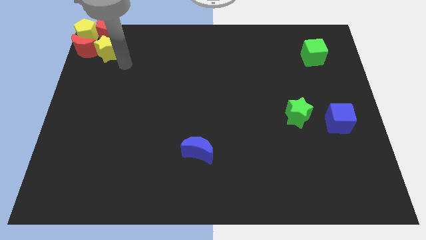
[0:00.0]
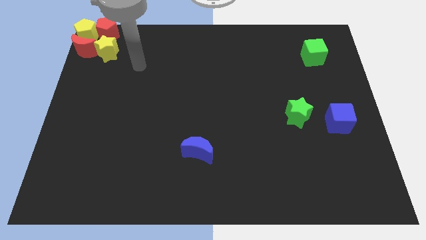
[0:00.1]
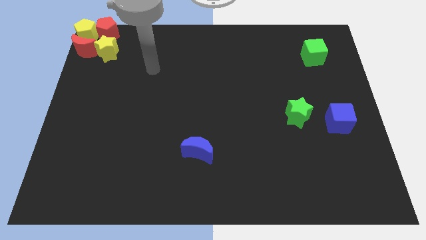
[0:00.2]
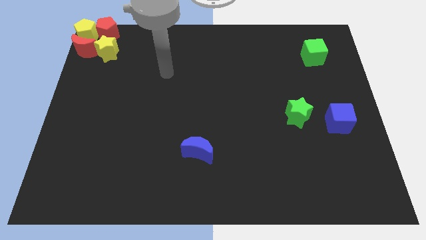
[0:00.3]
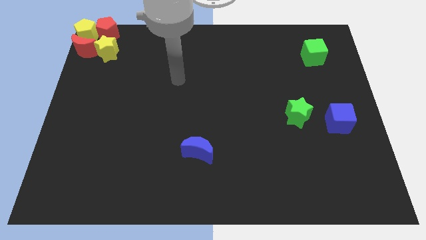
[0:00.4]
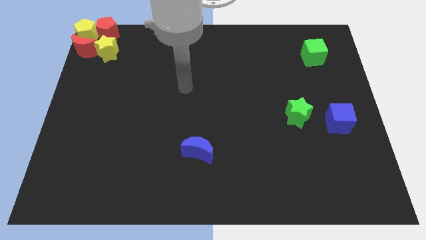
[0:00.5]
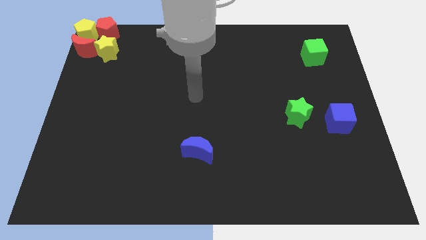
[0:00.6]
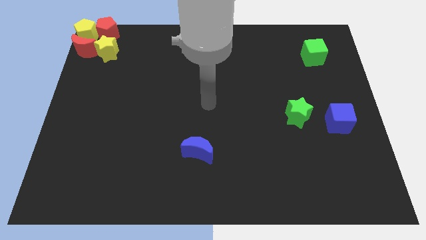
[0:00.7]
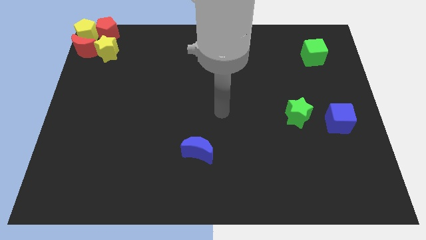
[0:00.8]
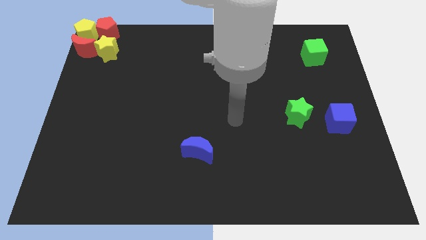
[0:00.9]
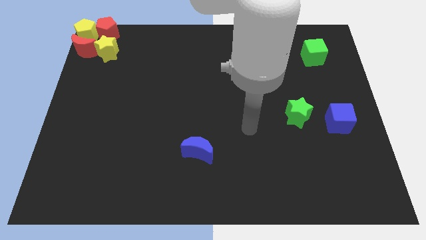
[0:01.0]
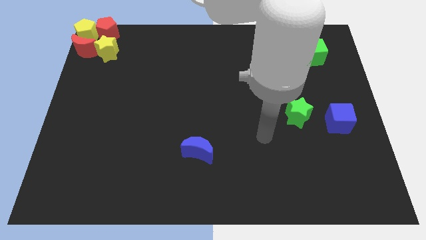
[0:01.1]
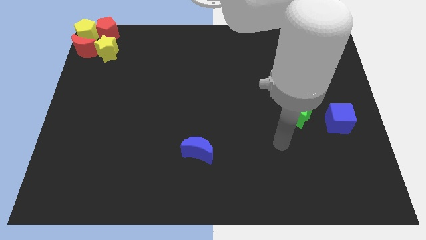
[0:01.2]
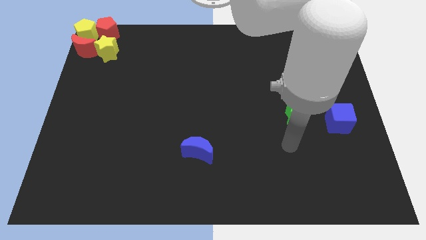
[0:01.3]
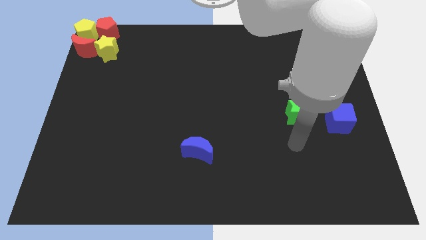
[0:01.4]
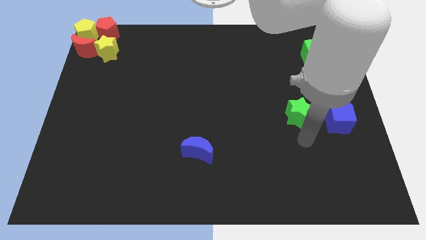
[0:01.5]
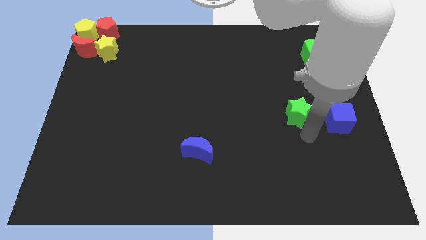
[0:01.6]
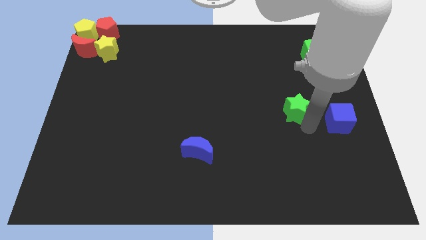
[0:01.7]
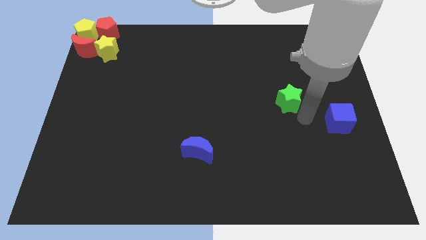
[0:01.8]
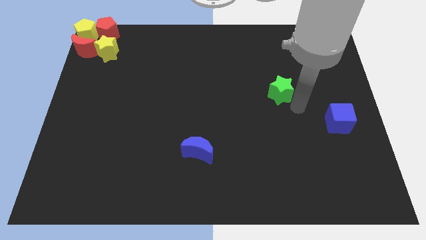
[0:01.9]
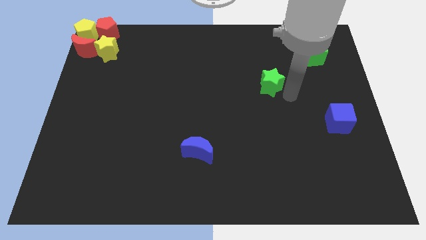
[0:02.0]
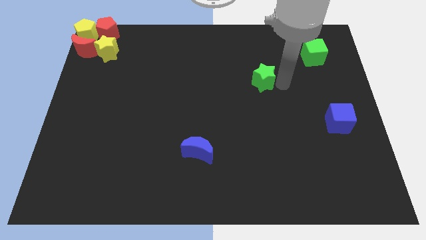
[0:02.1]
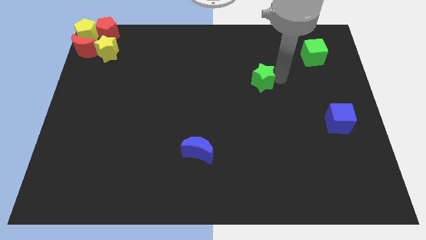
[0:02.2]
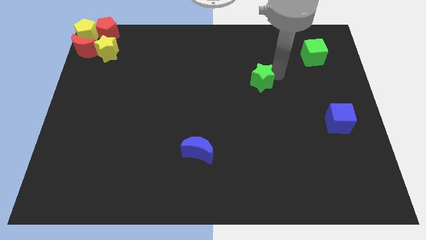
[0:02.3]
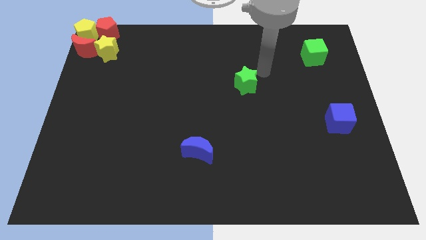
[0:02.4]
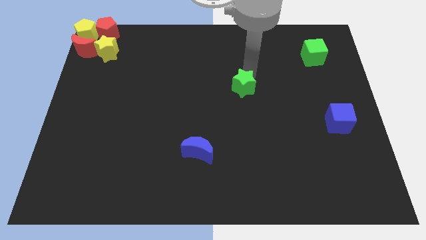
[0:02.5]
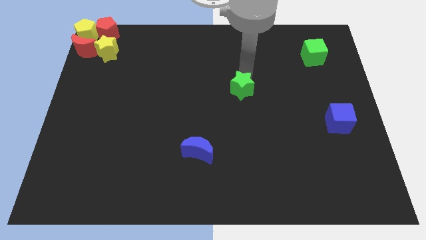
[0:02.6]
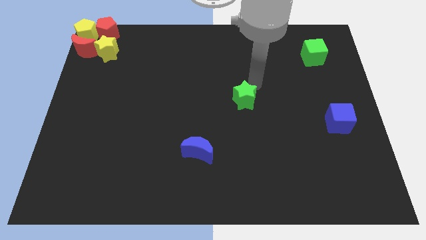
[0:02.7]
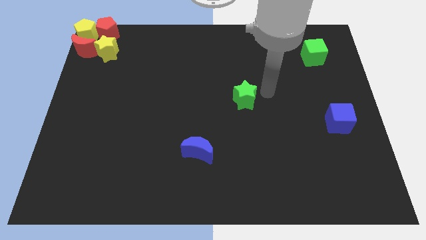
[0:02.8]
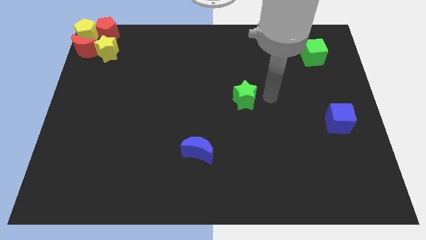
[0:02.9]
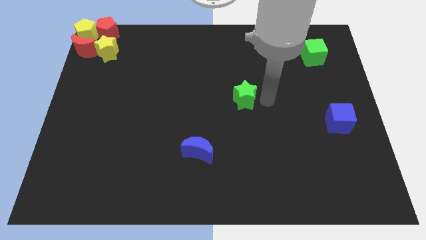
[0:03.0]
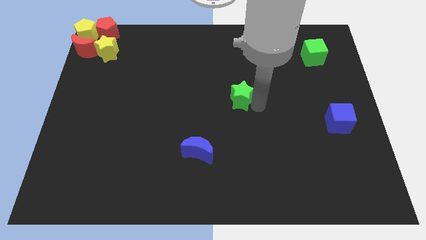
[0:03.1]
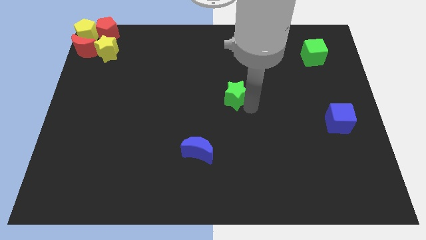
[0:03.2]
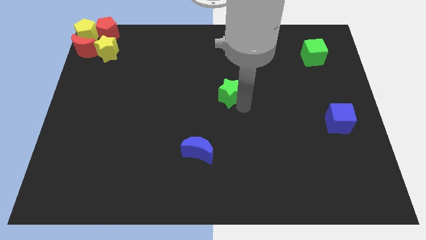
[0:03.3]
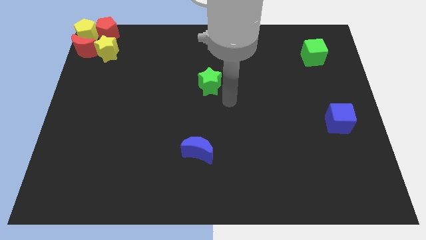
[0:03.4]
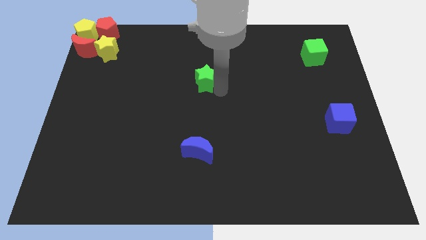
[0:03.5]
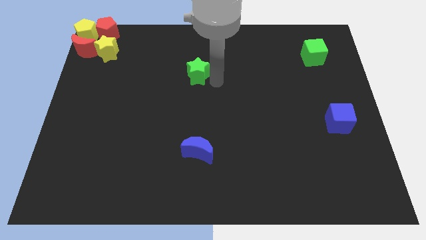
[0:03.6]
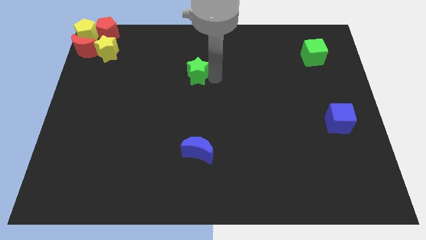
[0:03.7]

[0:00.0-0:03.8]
move the green star to the top of the blue crescent

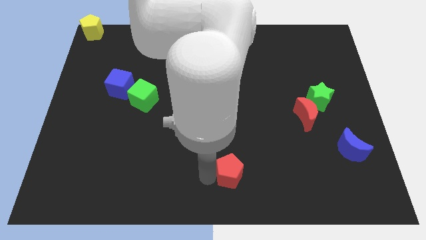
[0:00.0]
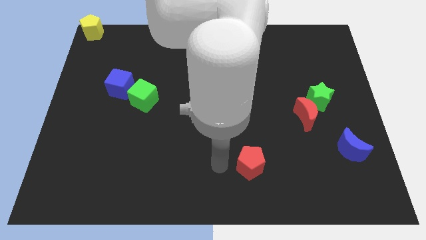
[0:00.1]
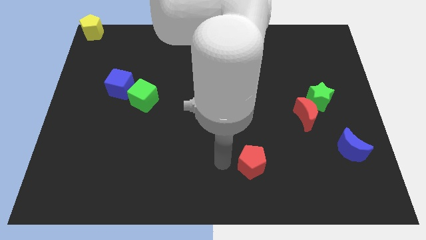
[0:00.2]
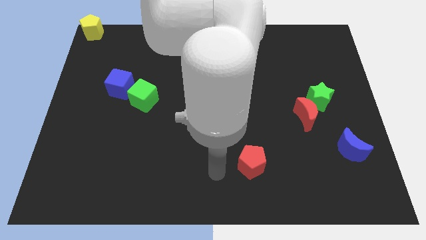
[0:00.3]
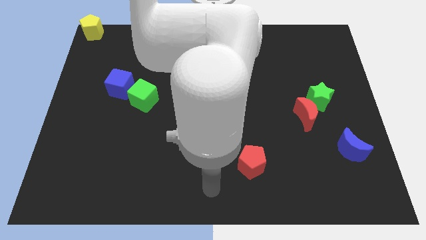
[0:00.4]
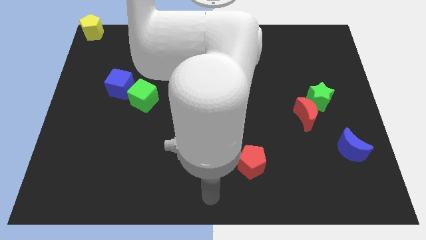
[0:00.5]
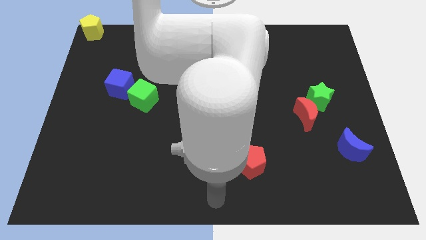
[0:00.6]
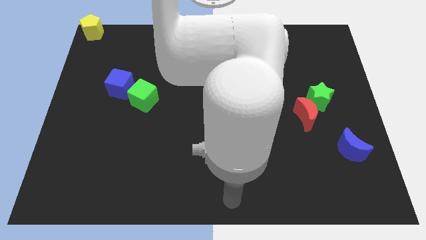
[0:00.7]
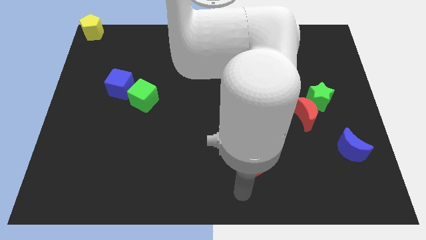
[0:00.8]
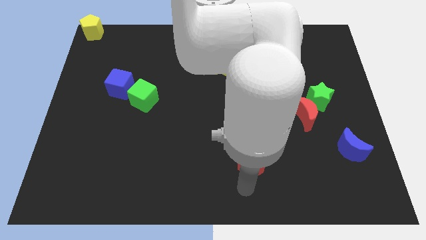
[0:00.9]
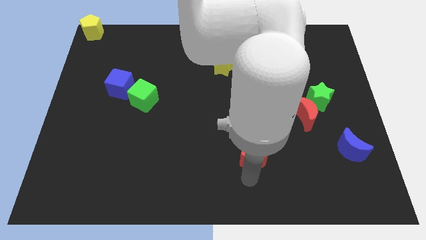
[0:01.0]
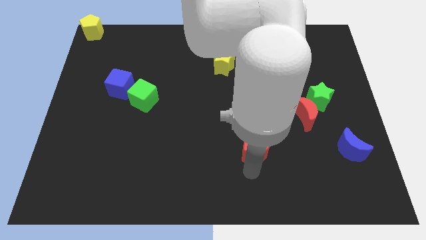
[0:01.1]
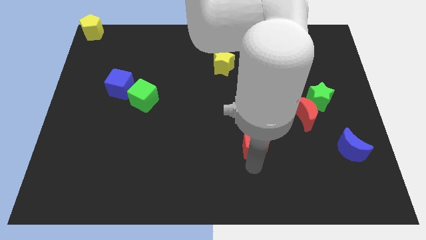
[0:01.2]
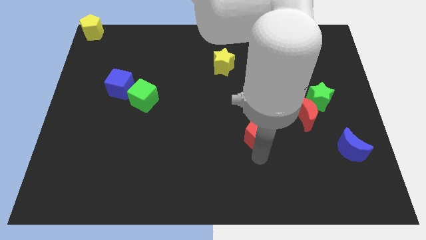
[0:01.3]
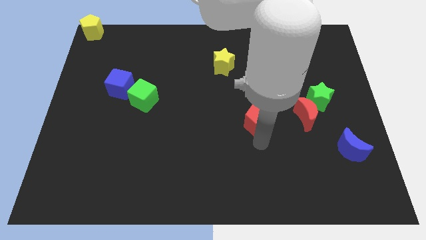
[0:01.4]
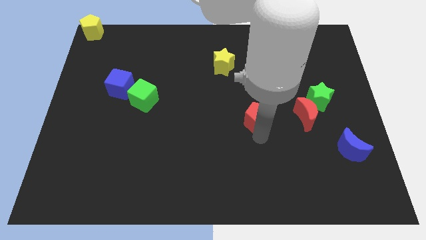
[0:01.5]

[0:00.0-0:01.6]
drag the red pentagon to the left side of the red moon

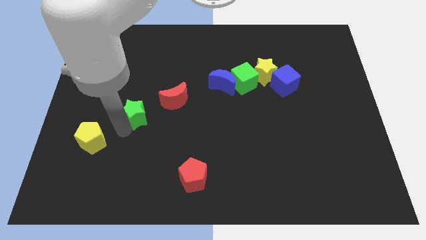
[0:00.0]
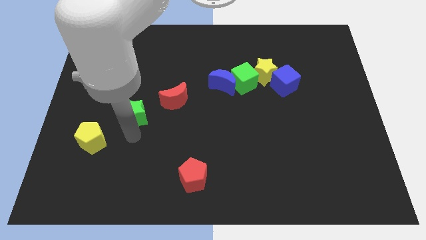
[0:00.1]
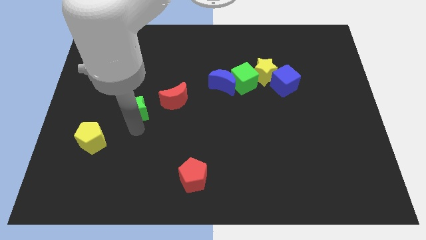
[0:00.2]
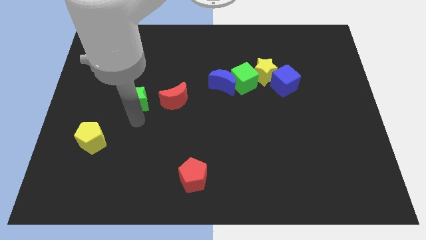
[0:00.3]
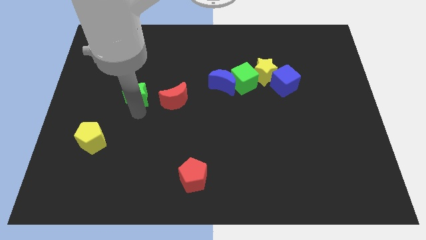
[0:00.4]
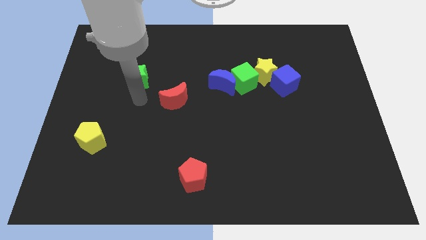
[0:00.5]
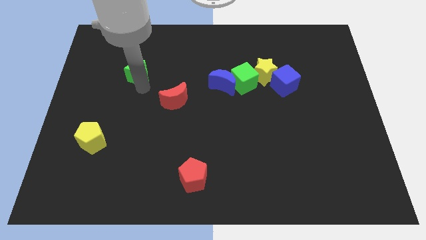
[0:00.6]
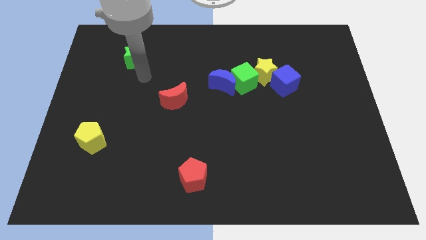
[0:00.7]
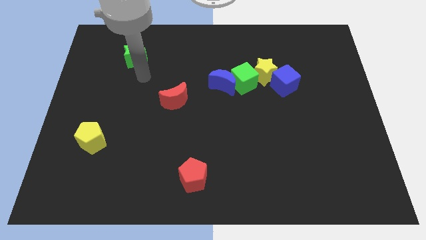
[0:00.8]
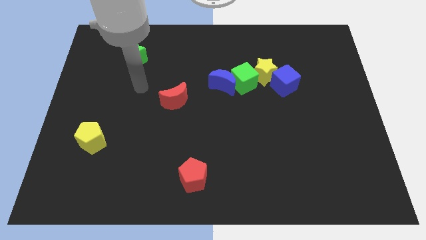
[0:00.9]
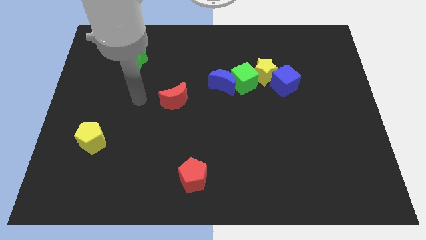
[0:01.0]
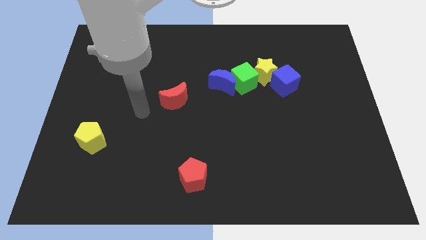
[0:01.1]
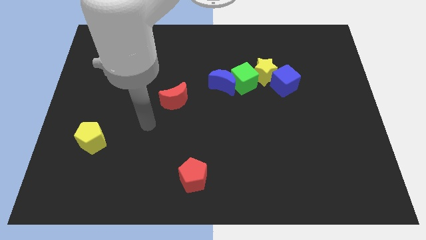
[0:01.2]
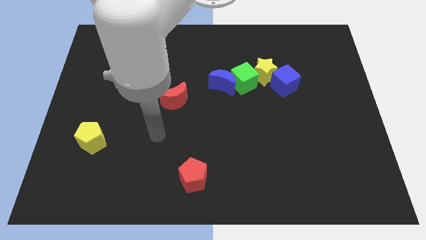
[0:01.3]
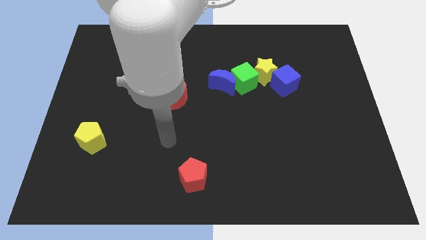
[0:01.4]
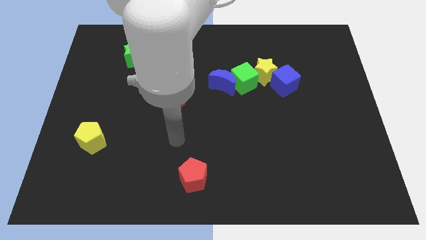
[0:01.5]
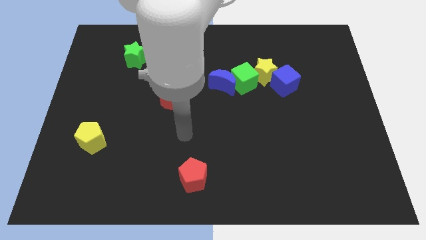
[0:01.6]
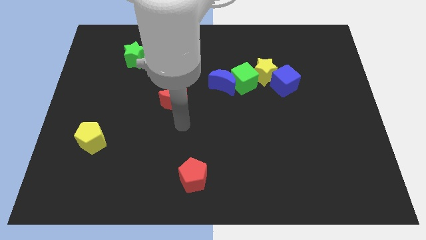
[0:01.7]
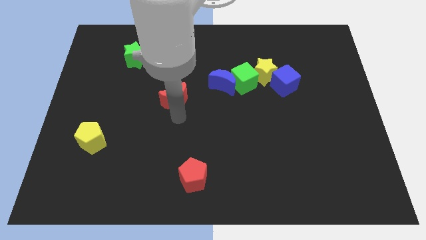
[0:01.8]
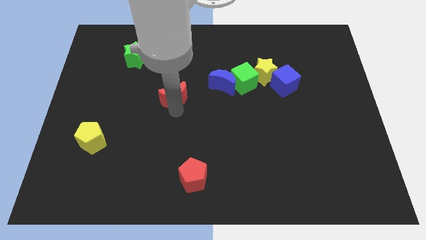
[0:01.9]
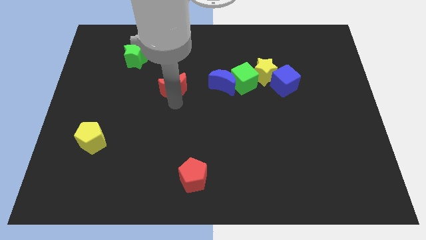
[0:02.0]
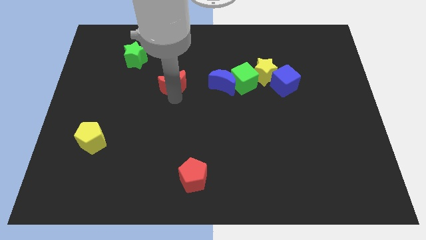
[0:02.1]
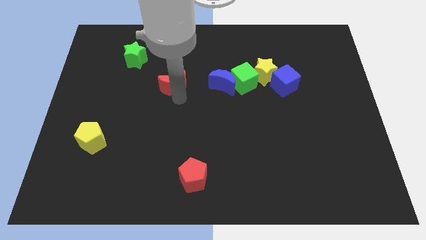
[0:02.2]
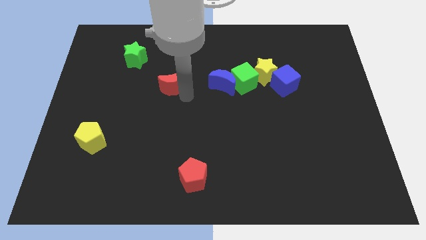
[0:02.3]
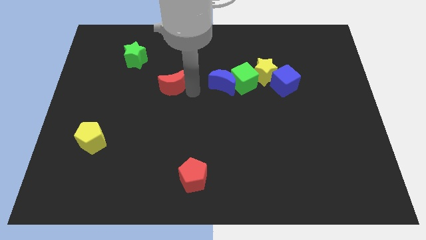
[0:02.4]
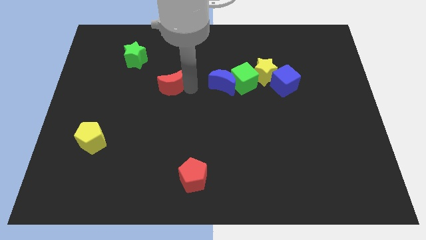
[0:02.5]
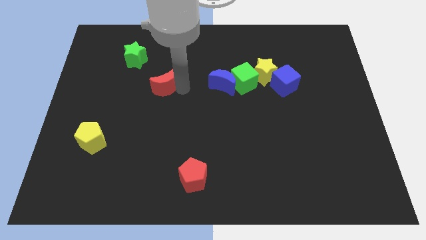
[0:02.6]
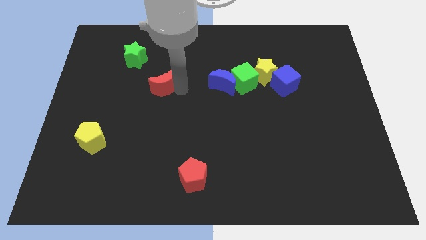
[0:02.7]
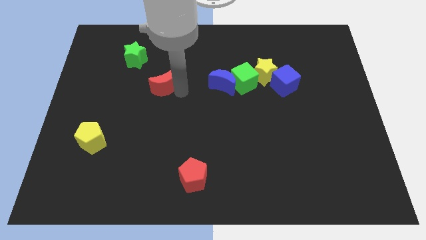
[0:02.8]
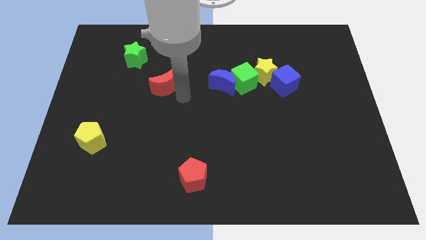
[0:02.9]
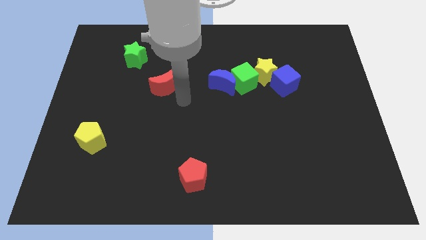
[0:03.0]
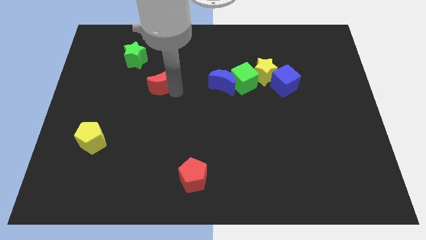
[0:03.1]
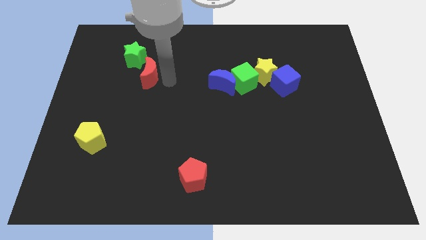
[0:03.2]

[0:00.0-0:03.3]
move the red moon diagonal to the green star
